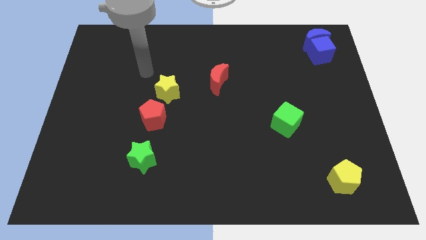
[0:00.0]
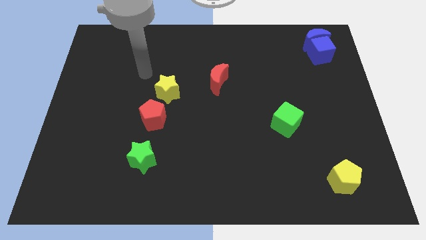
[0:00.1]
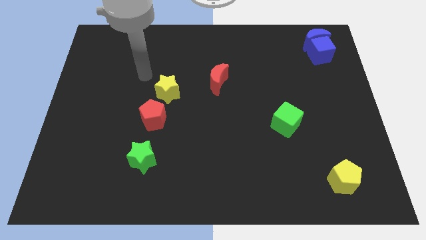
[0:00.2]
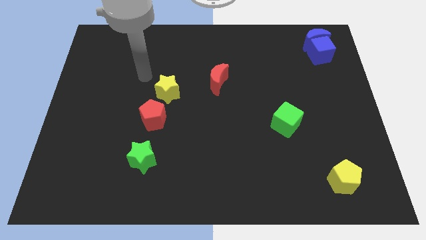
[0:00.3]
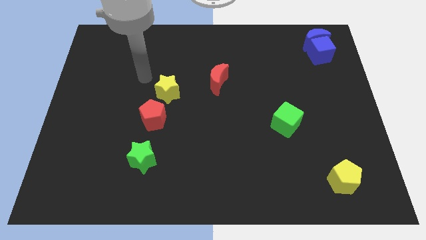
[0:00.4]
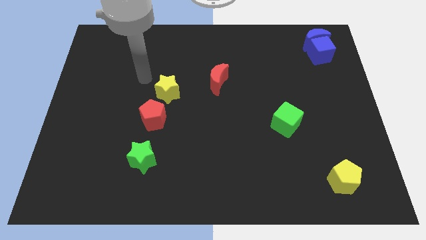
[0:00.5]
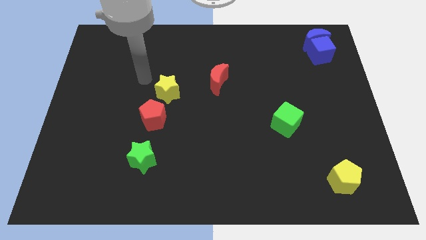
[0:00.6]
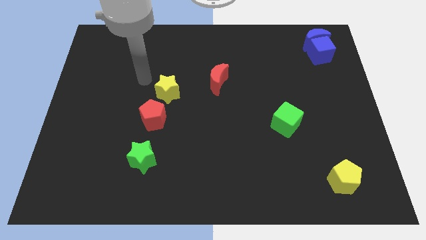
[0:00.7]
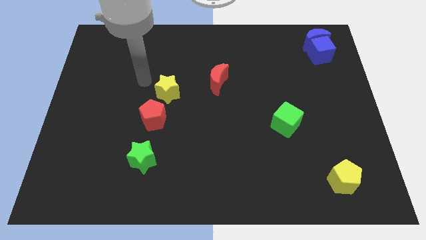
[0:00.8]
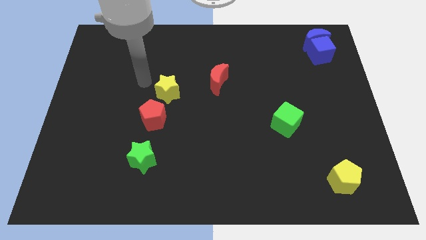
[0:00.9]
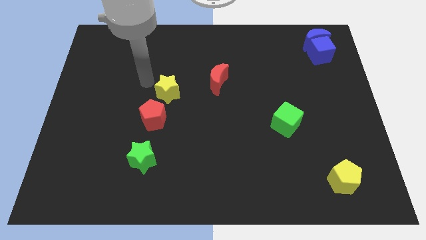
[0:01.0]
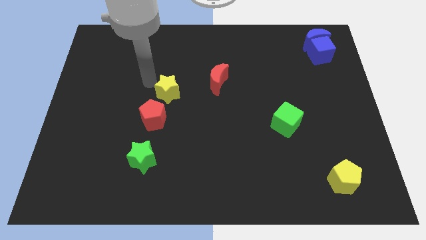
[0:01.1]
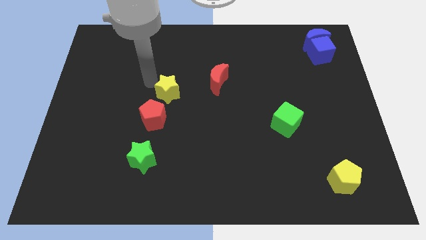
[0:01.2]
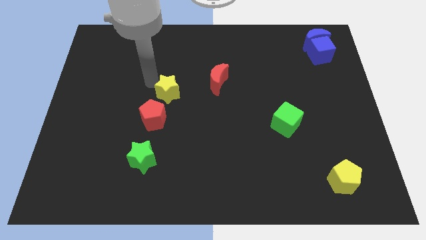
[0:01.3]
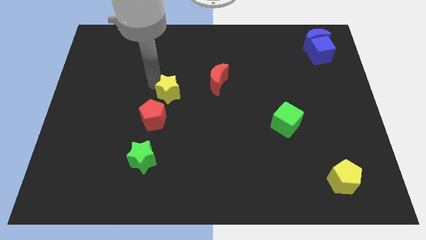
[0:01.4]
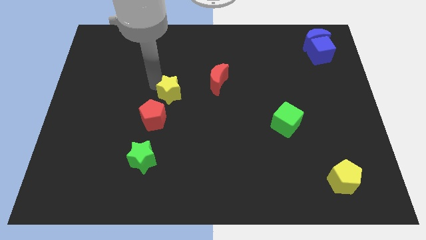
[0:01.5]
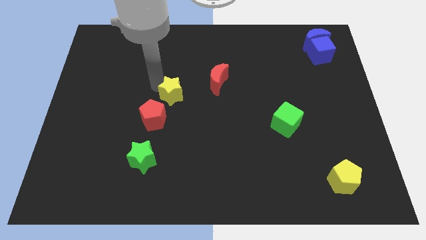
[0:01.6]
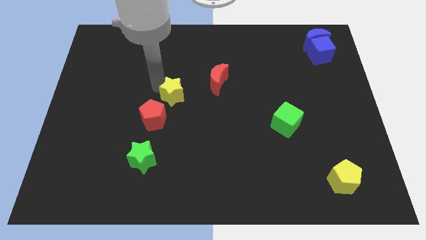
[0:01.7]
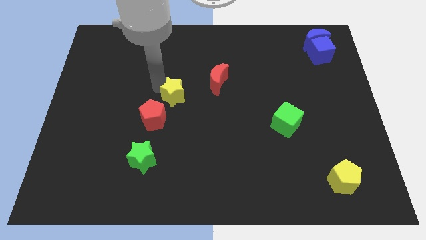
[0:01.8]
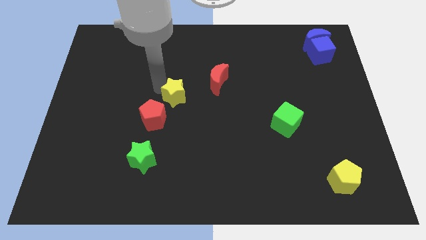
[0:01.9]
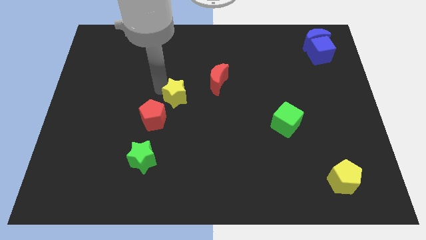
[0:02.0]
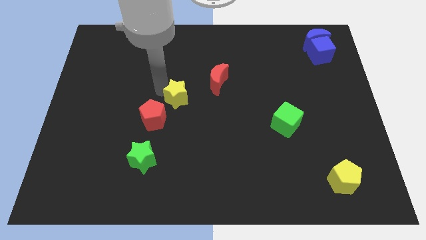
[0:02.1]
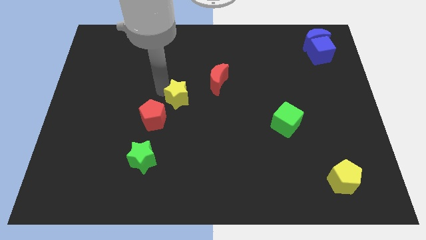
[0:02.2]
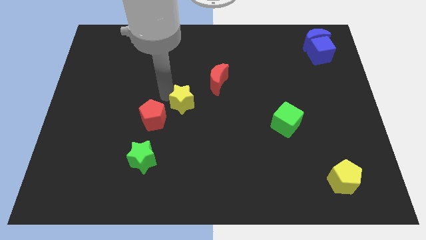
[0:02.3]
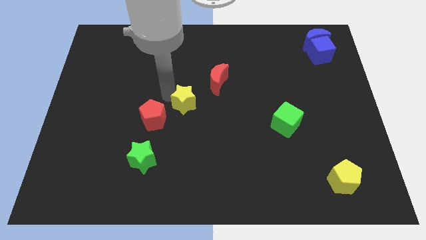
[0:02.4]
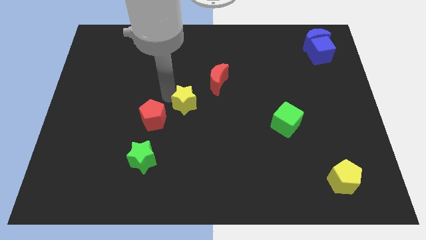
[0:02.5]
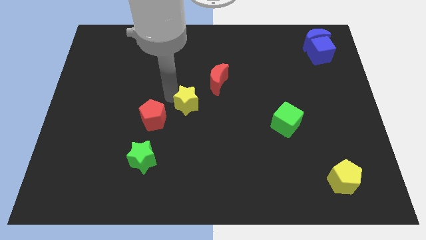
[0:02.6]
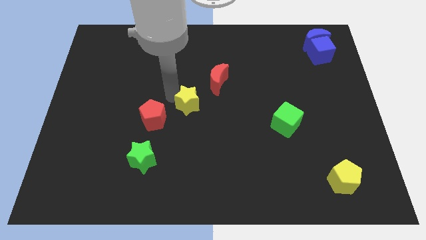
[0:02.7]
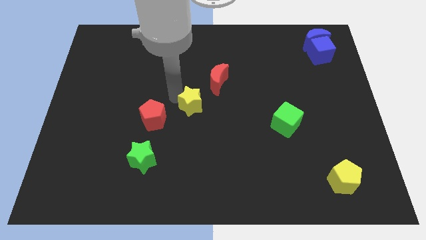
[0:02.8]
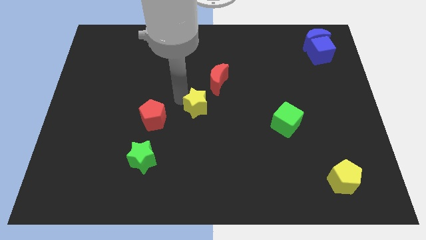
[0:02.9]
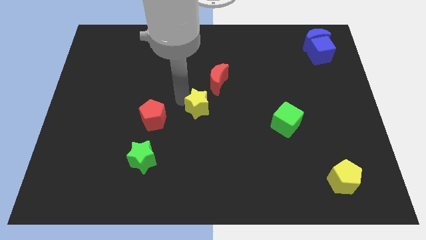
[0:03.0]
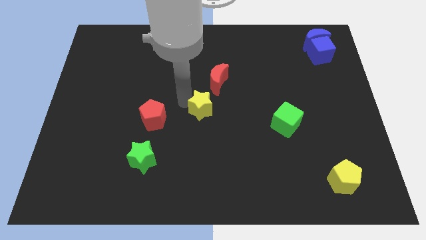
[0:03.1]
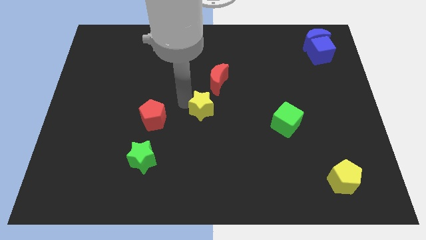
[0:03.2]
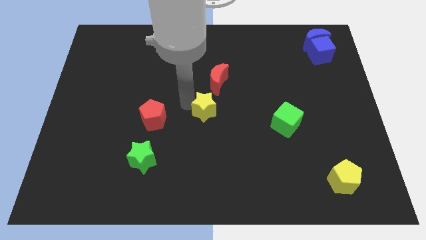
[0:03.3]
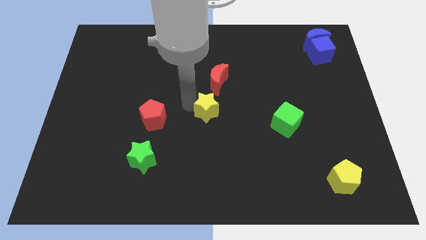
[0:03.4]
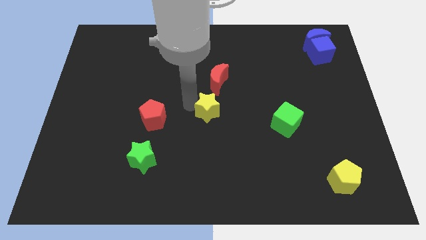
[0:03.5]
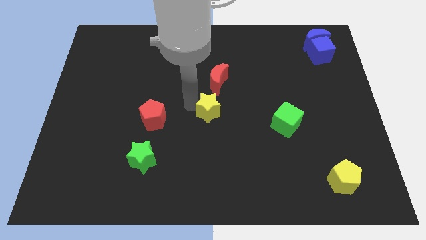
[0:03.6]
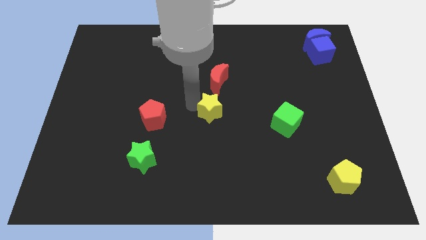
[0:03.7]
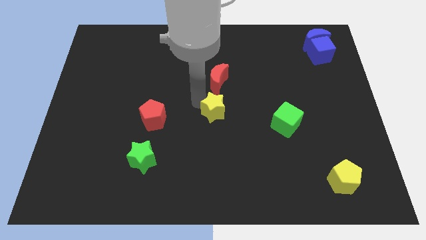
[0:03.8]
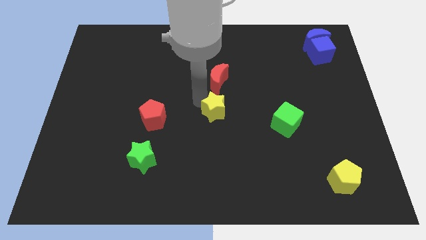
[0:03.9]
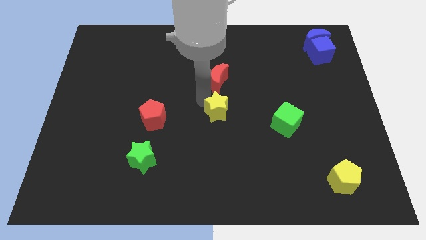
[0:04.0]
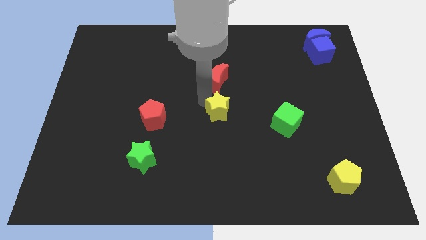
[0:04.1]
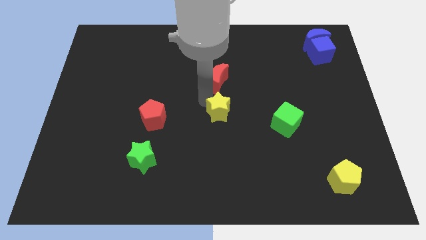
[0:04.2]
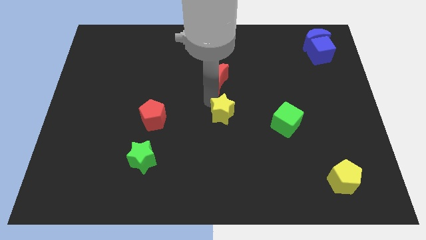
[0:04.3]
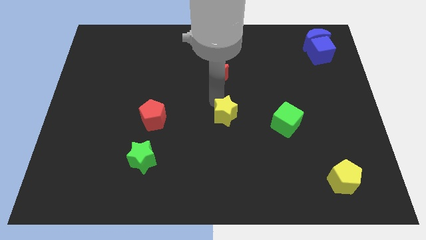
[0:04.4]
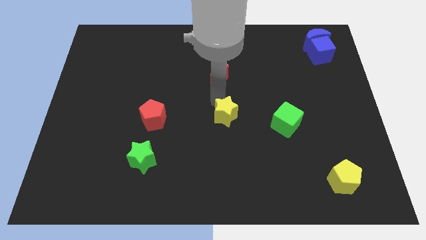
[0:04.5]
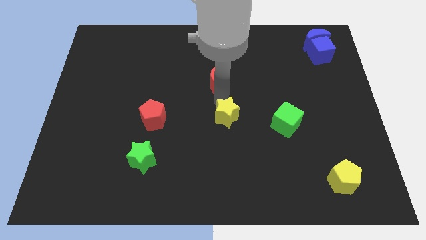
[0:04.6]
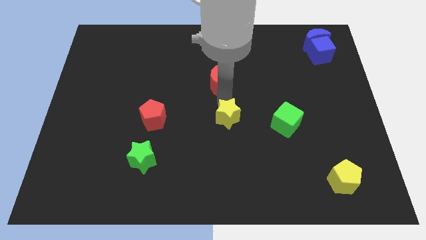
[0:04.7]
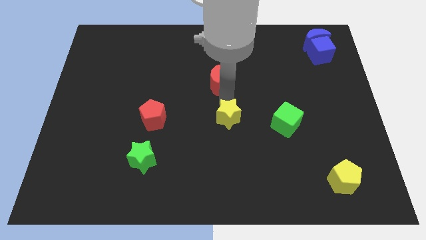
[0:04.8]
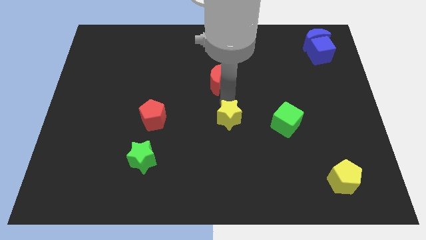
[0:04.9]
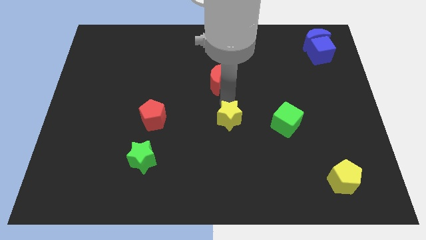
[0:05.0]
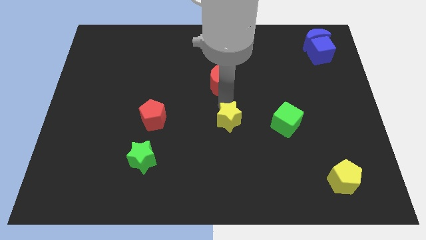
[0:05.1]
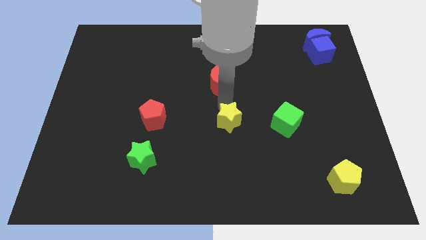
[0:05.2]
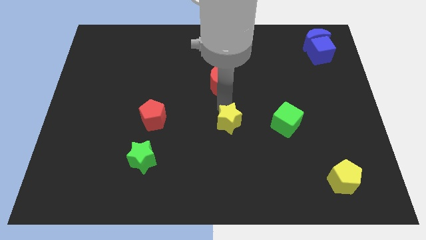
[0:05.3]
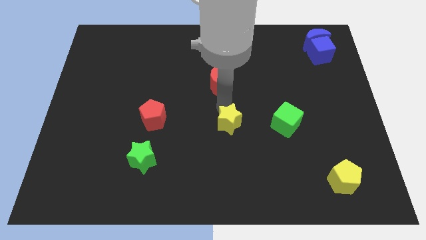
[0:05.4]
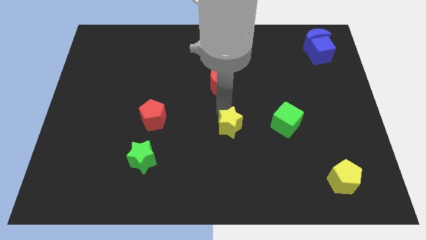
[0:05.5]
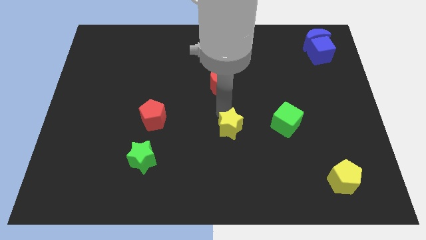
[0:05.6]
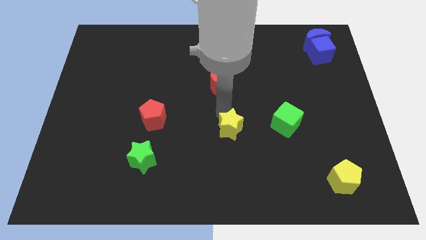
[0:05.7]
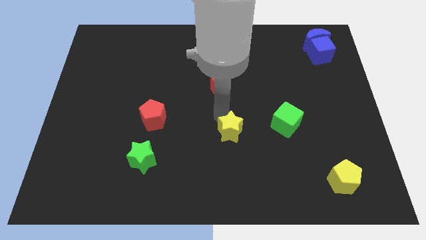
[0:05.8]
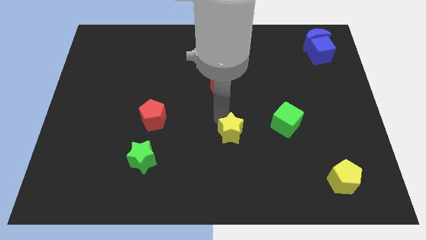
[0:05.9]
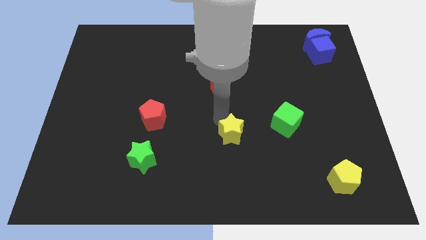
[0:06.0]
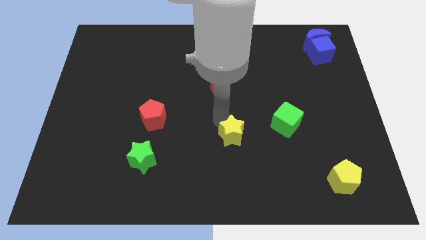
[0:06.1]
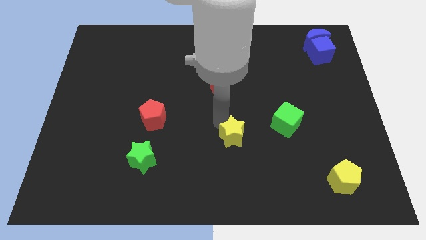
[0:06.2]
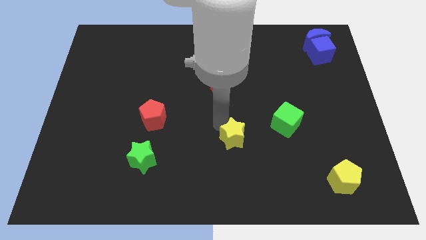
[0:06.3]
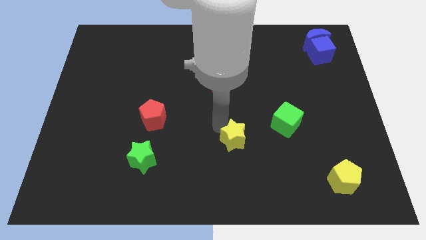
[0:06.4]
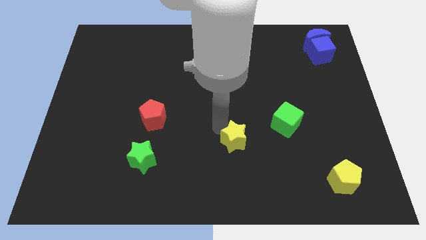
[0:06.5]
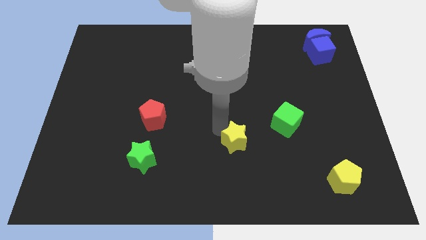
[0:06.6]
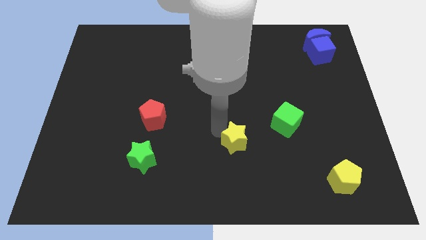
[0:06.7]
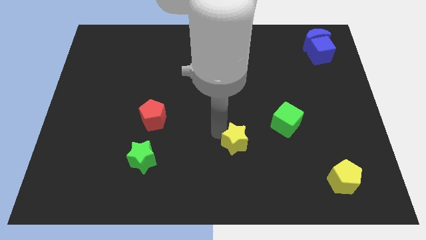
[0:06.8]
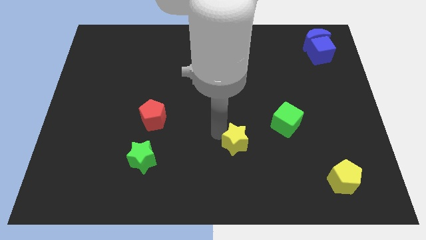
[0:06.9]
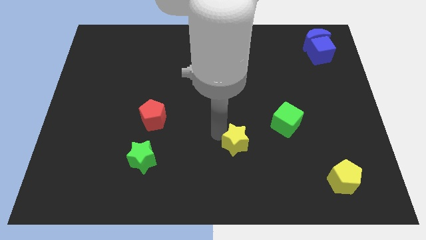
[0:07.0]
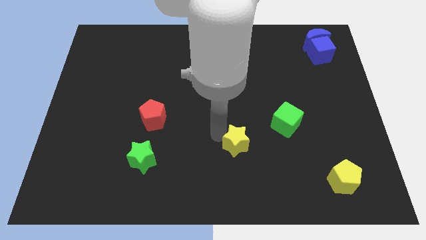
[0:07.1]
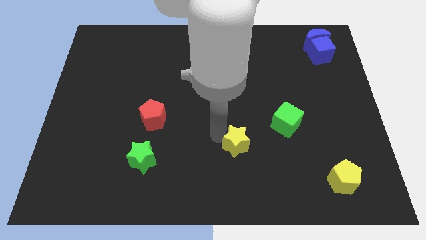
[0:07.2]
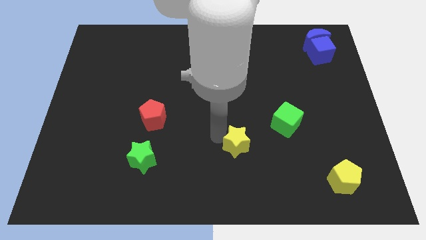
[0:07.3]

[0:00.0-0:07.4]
push the yellow star to the bottom of the board

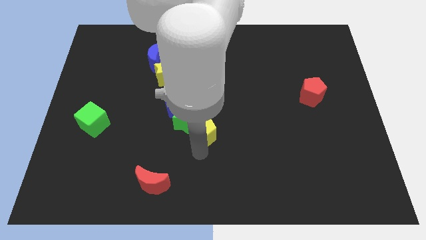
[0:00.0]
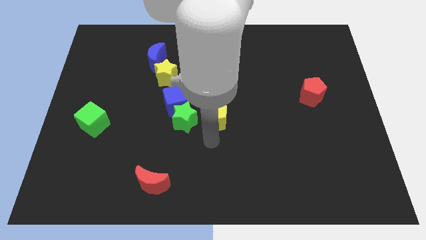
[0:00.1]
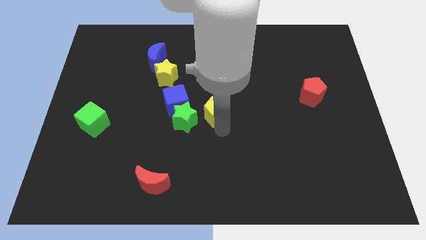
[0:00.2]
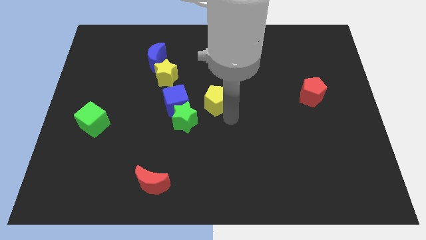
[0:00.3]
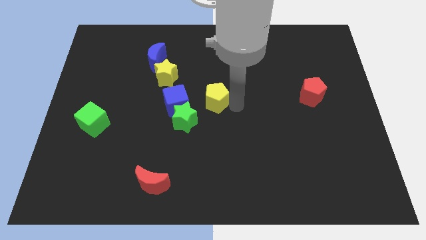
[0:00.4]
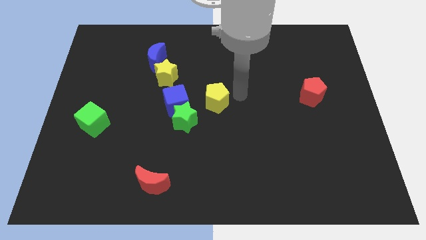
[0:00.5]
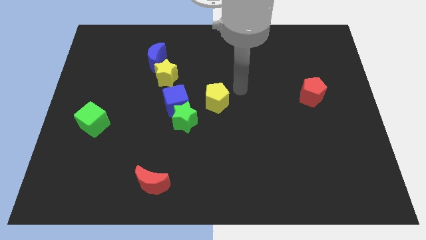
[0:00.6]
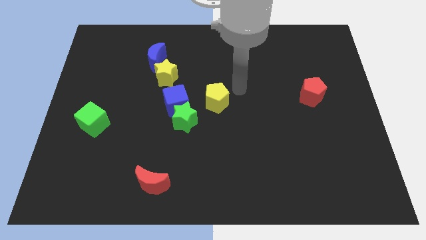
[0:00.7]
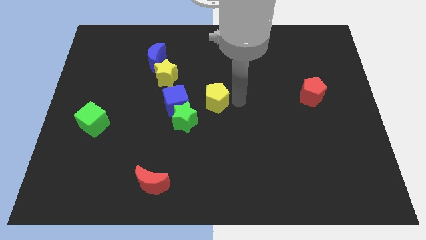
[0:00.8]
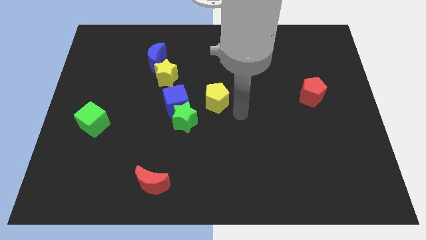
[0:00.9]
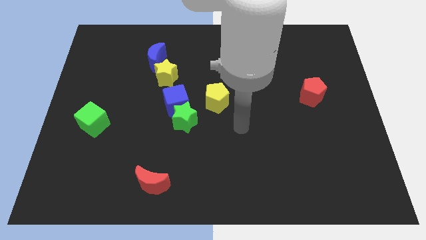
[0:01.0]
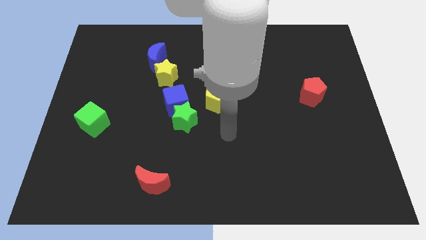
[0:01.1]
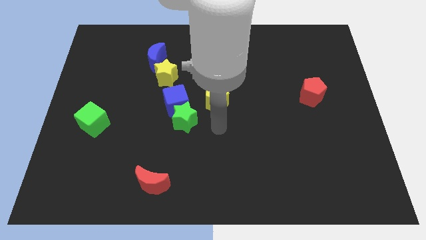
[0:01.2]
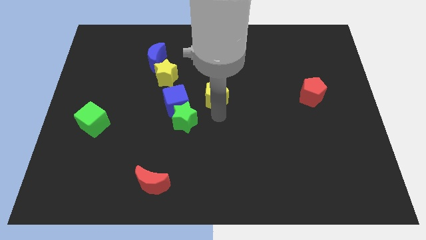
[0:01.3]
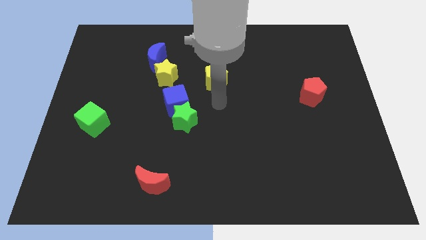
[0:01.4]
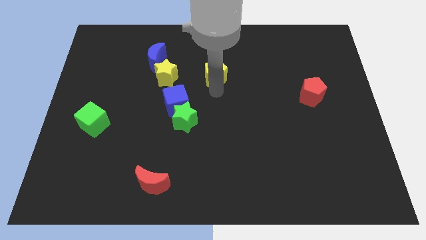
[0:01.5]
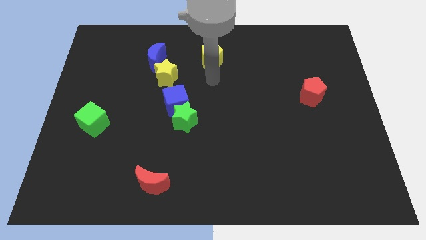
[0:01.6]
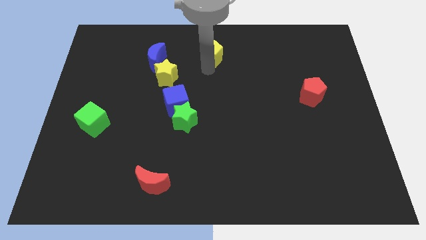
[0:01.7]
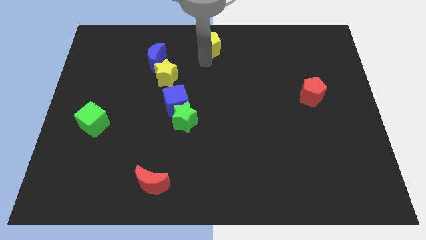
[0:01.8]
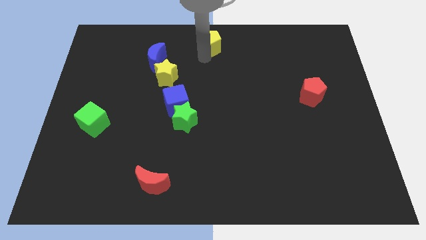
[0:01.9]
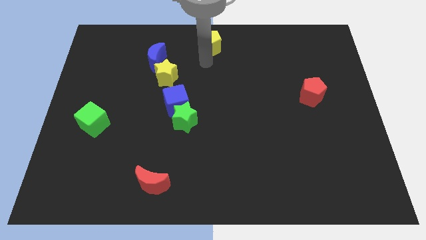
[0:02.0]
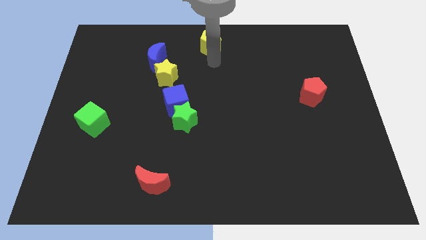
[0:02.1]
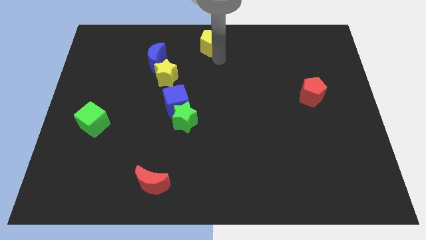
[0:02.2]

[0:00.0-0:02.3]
place the yellow pentagon to the top center of the board
